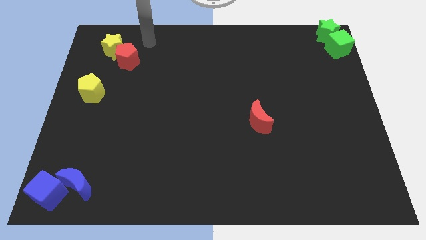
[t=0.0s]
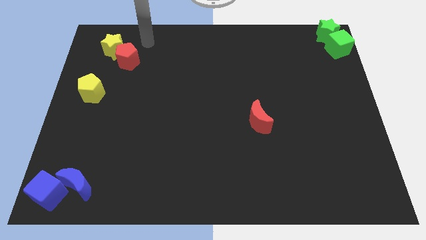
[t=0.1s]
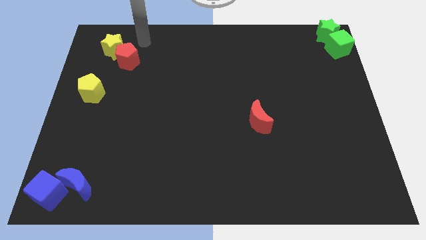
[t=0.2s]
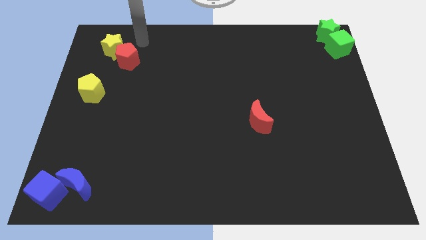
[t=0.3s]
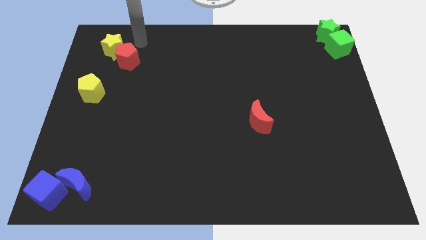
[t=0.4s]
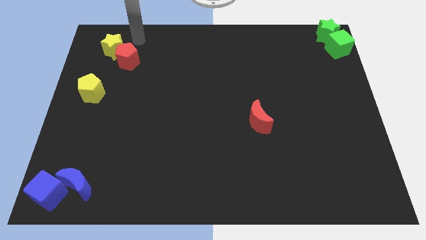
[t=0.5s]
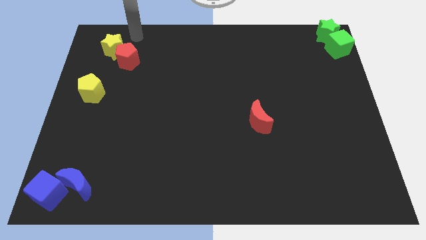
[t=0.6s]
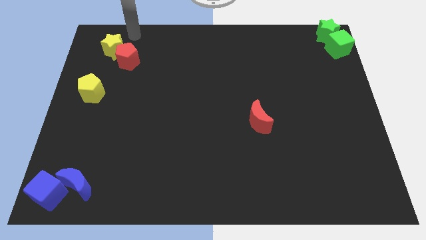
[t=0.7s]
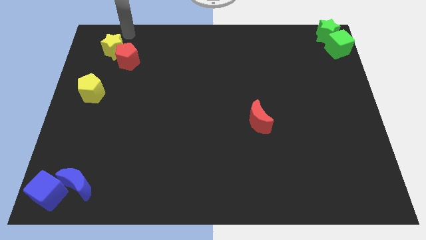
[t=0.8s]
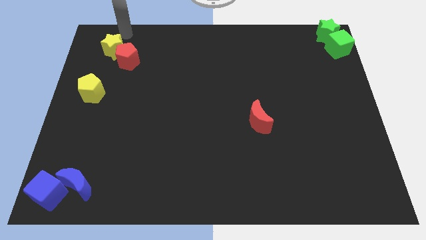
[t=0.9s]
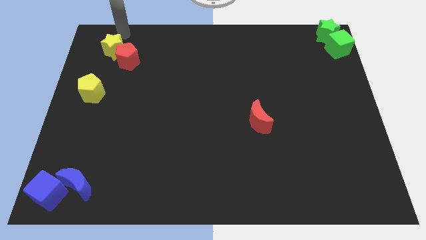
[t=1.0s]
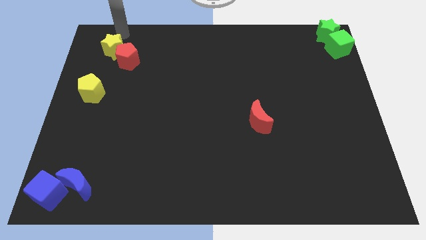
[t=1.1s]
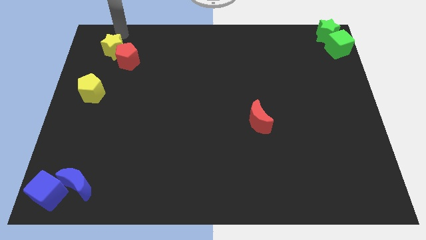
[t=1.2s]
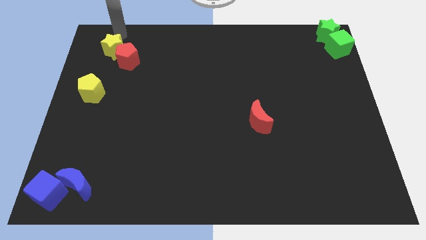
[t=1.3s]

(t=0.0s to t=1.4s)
move your arm to the top side of the yellow star

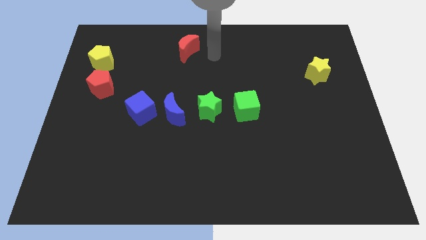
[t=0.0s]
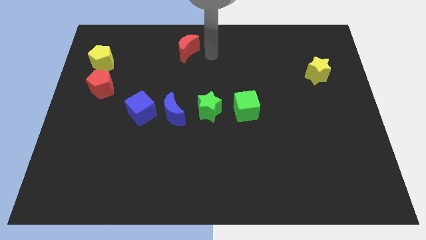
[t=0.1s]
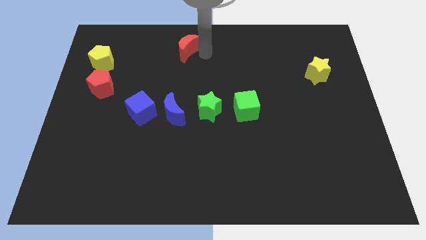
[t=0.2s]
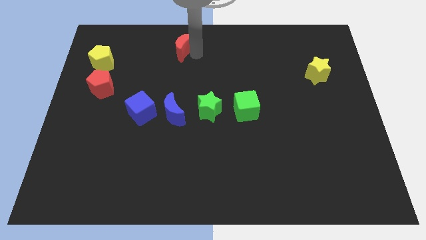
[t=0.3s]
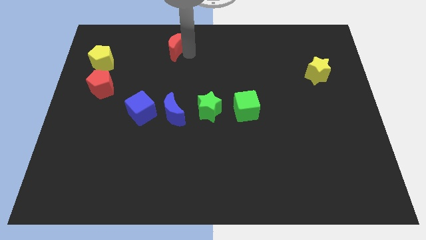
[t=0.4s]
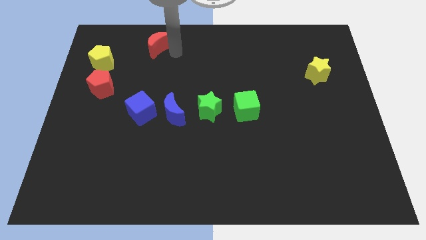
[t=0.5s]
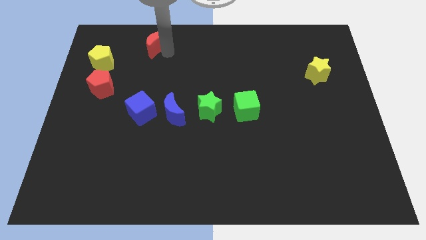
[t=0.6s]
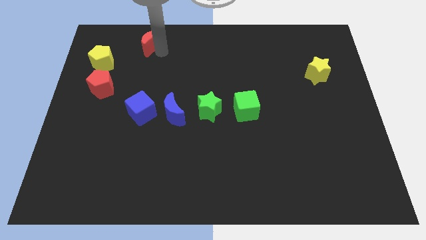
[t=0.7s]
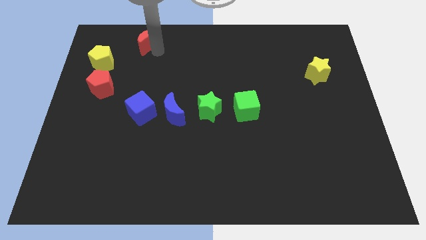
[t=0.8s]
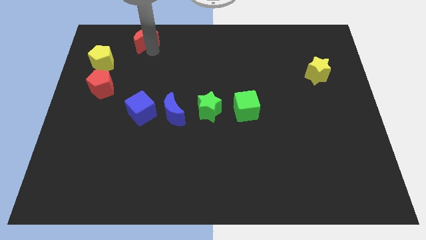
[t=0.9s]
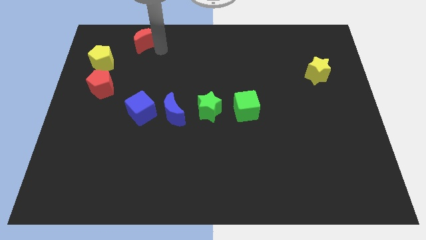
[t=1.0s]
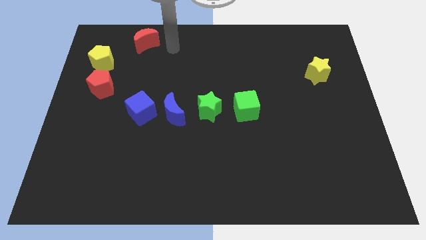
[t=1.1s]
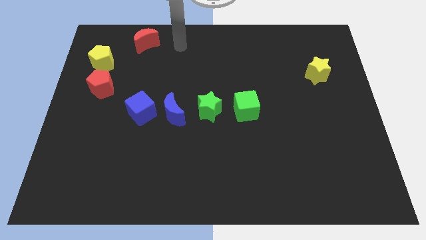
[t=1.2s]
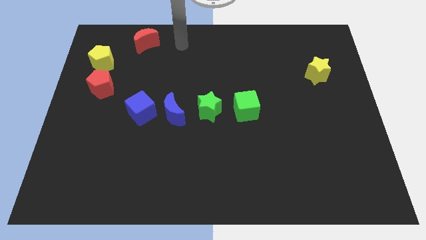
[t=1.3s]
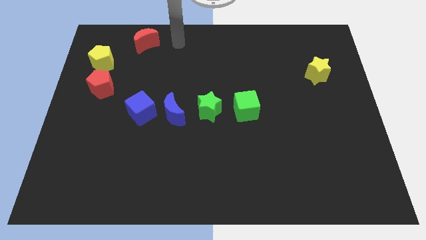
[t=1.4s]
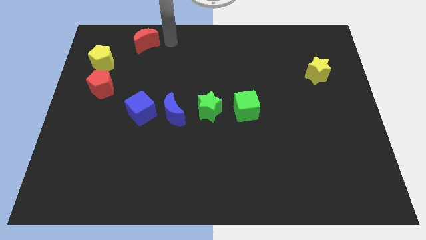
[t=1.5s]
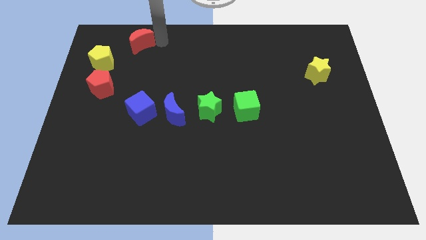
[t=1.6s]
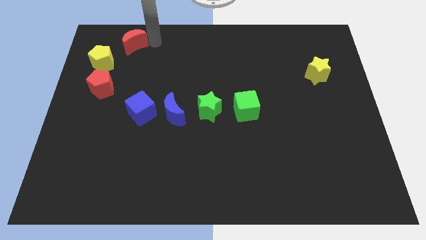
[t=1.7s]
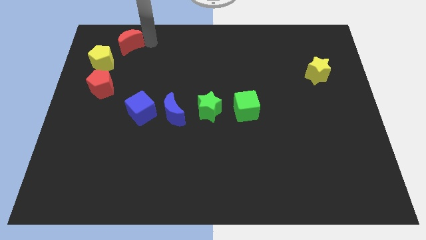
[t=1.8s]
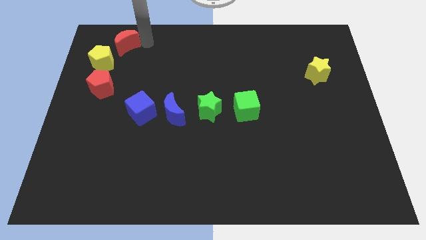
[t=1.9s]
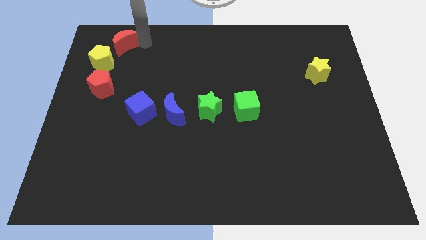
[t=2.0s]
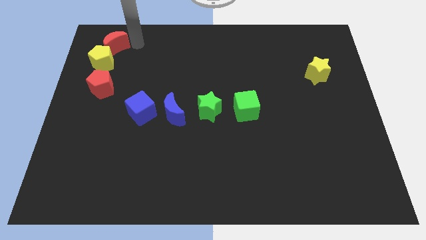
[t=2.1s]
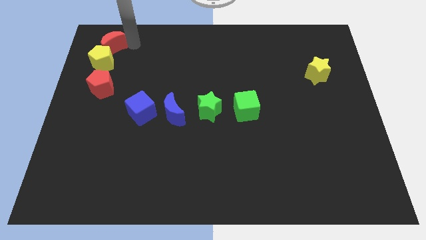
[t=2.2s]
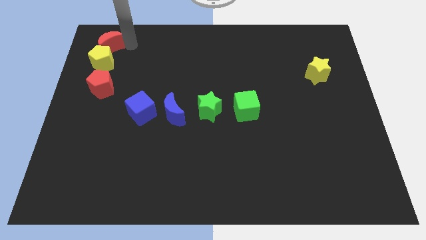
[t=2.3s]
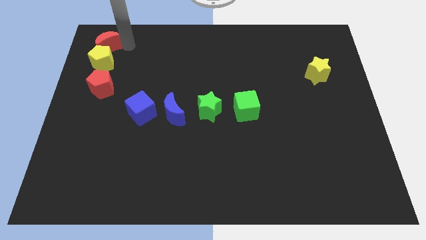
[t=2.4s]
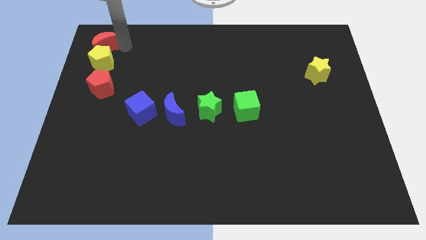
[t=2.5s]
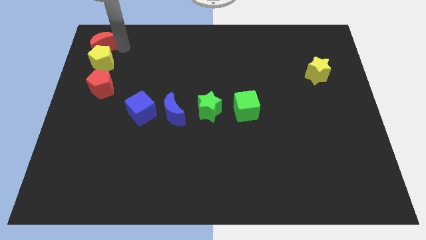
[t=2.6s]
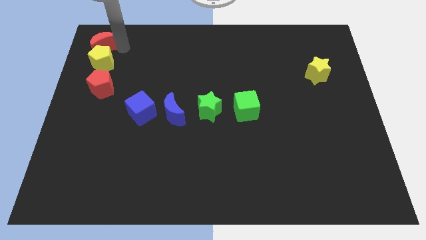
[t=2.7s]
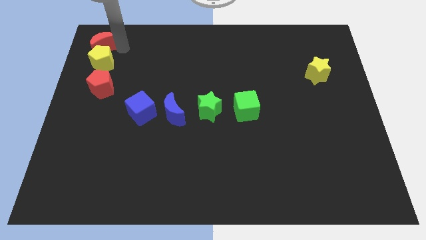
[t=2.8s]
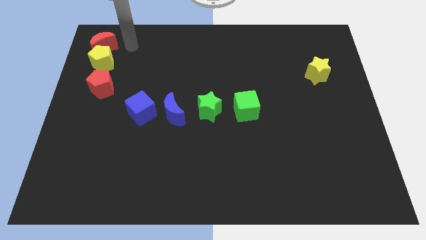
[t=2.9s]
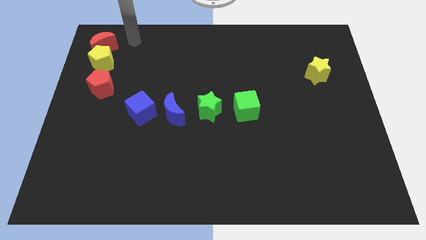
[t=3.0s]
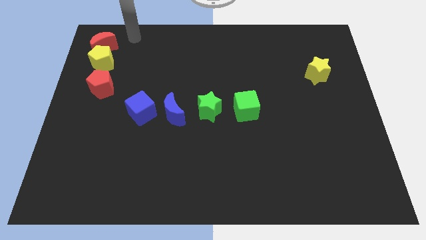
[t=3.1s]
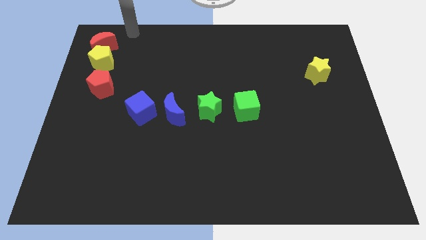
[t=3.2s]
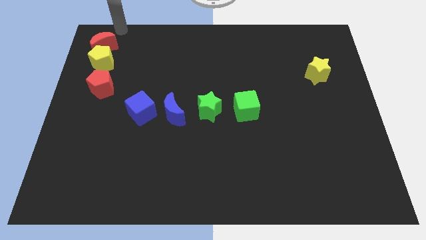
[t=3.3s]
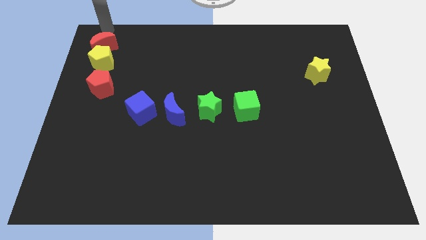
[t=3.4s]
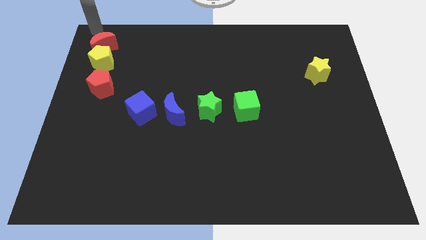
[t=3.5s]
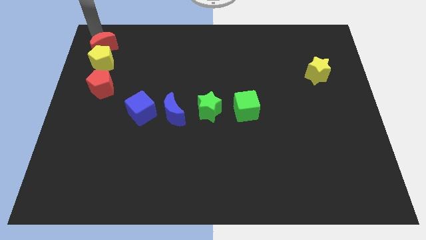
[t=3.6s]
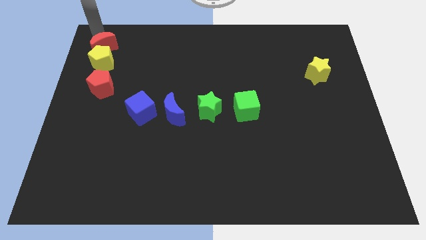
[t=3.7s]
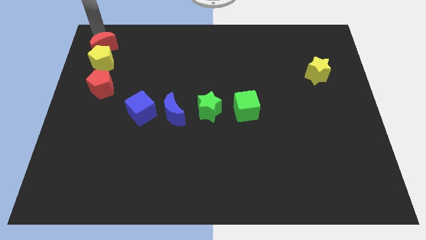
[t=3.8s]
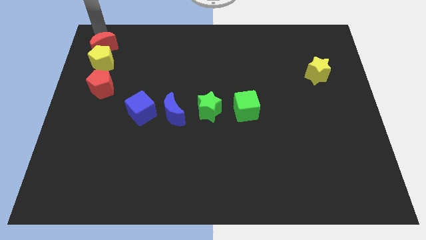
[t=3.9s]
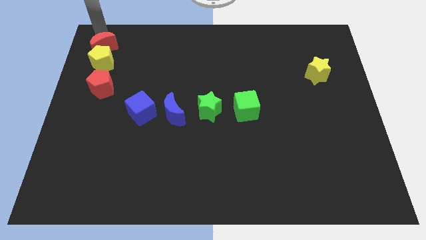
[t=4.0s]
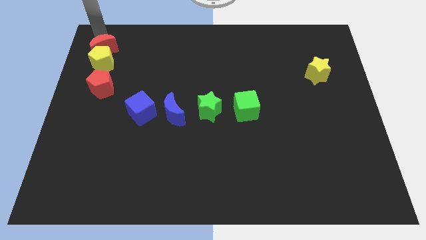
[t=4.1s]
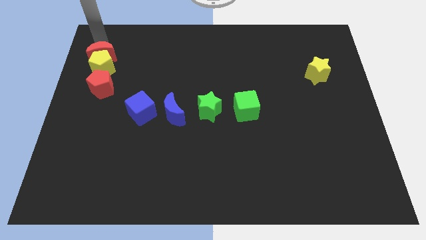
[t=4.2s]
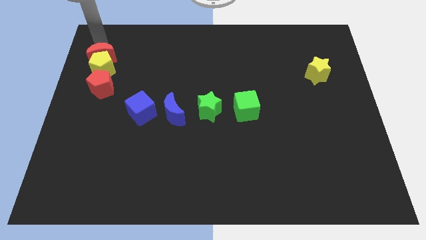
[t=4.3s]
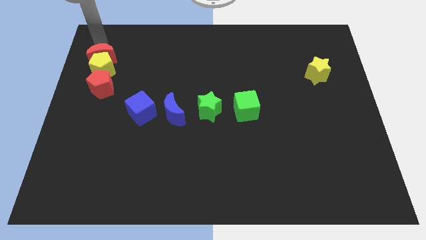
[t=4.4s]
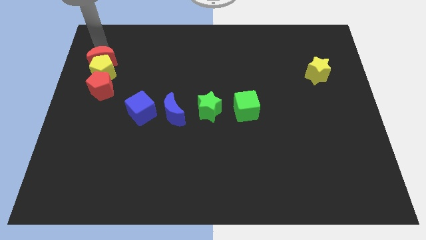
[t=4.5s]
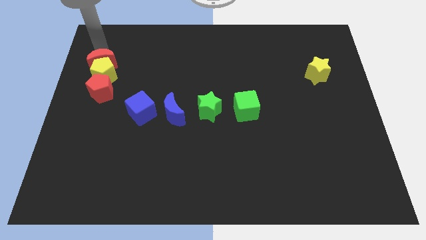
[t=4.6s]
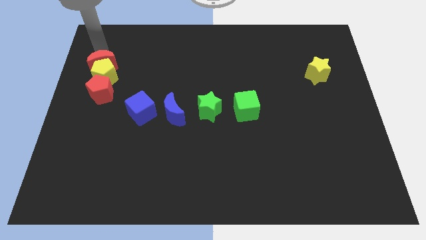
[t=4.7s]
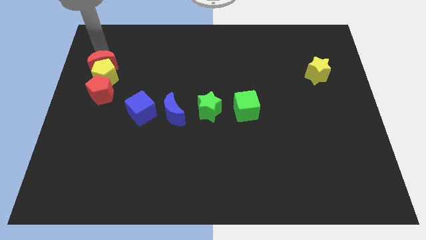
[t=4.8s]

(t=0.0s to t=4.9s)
move the red moon above the yellow pentagon

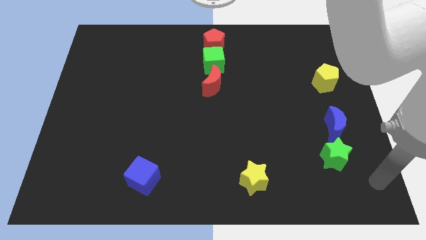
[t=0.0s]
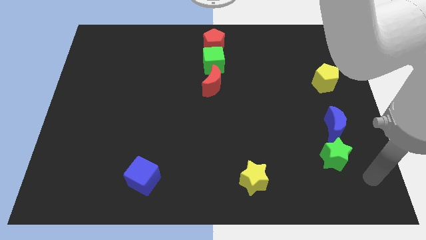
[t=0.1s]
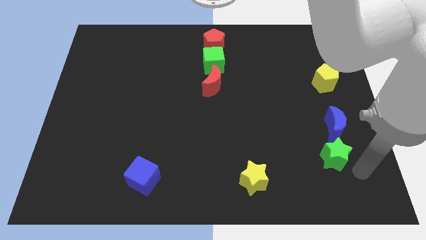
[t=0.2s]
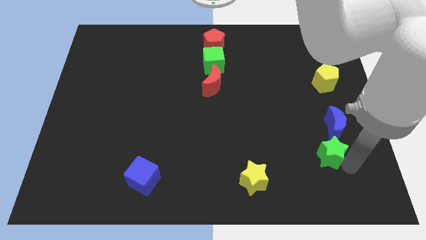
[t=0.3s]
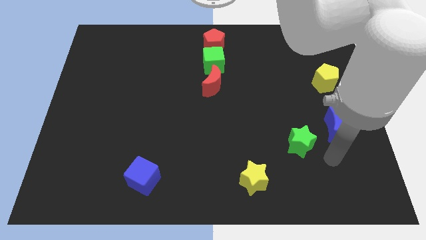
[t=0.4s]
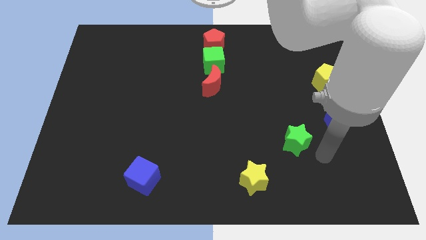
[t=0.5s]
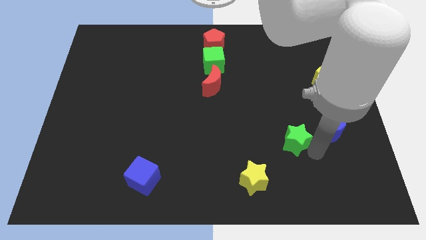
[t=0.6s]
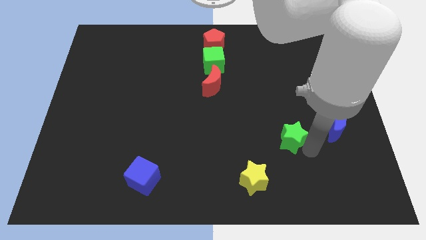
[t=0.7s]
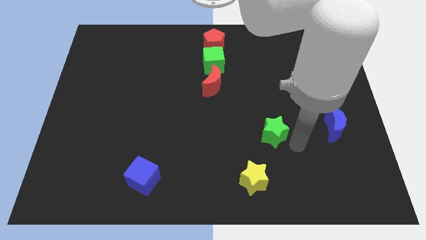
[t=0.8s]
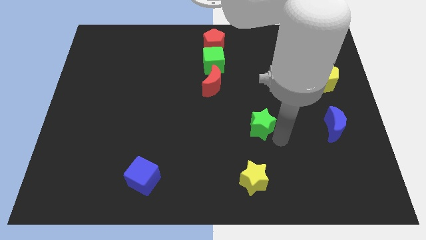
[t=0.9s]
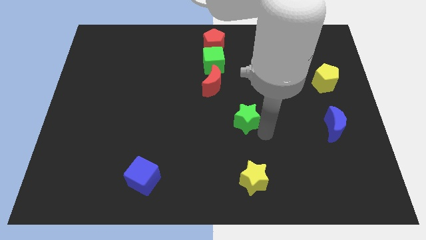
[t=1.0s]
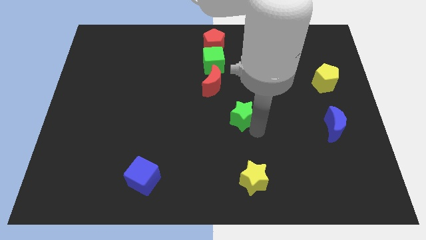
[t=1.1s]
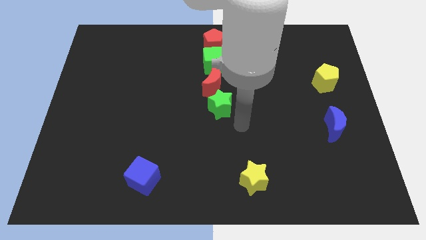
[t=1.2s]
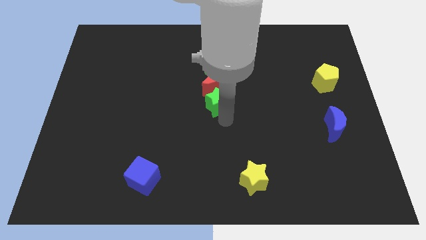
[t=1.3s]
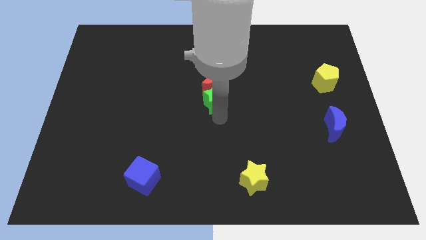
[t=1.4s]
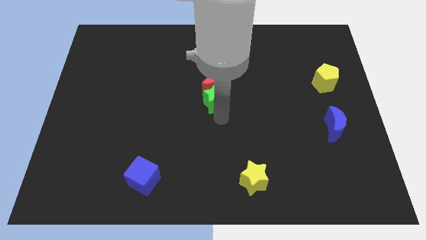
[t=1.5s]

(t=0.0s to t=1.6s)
place the green star below the red moon

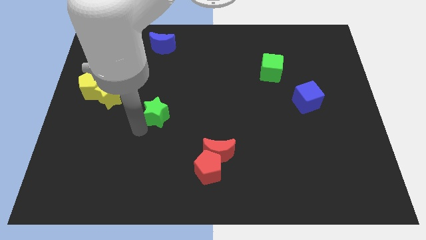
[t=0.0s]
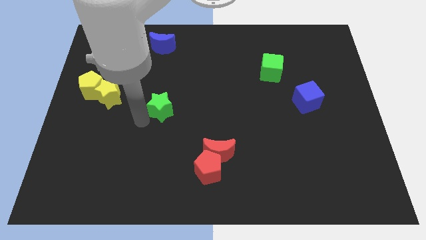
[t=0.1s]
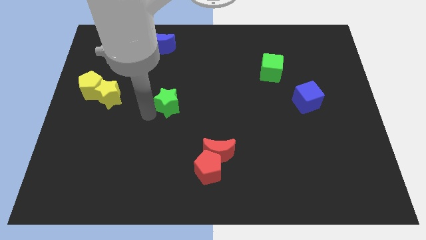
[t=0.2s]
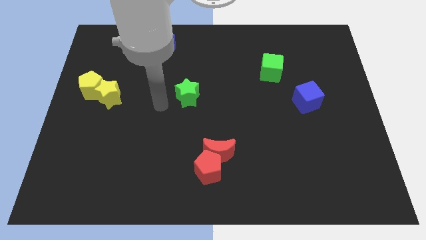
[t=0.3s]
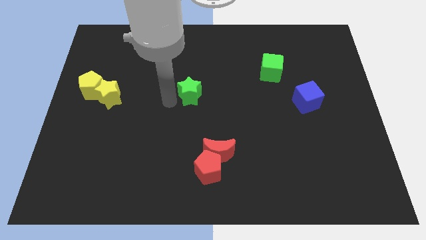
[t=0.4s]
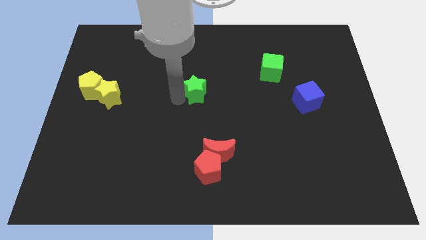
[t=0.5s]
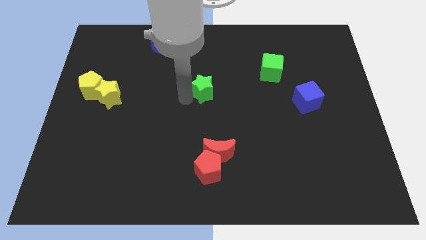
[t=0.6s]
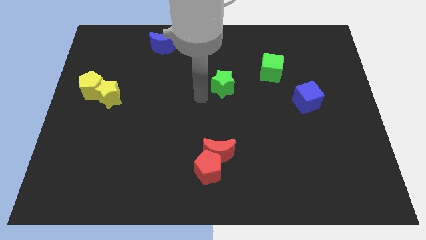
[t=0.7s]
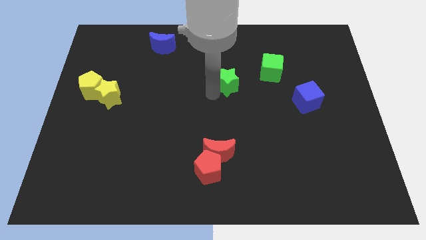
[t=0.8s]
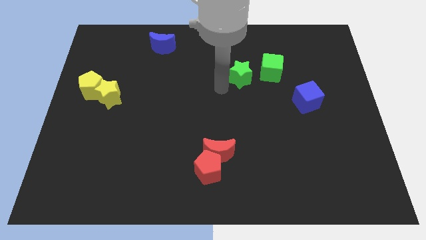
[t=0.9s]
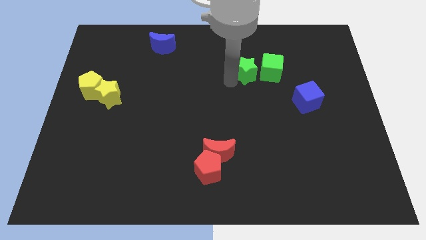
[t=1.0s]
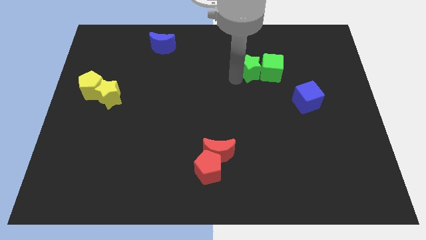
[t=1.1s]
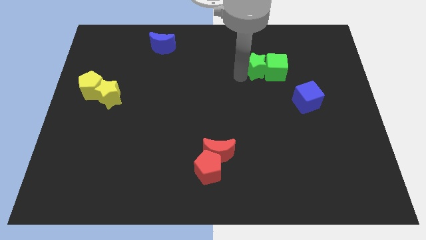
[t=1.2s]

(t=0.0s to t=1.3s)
drag the green star into the left side of the green cube
